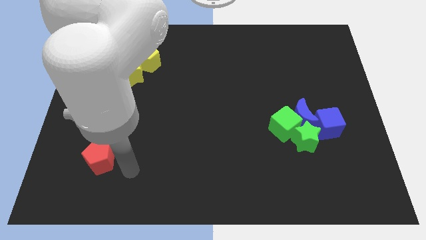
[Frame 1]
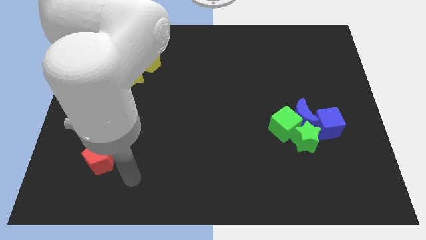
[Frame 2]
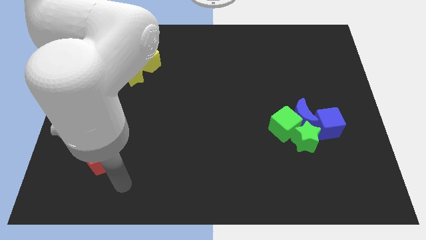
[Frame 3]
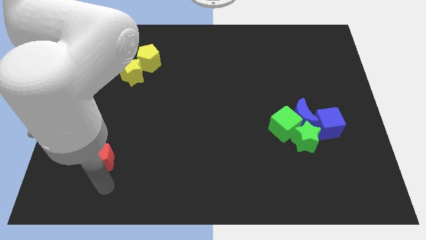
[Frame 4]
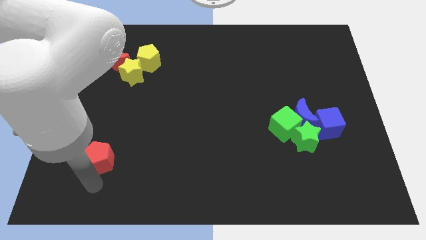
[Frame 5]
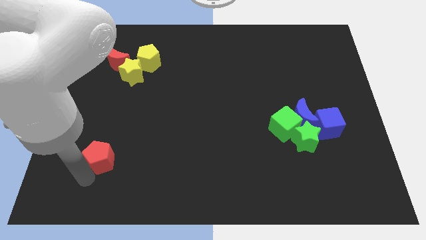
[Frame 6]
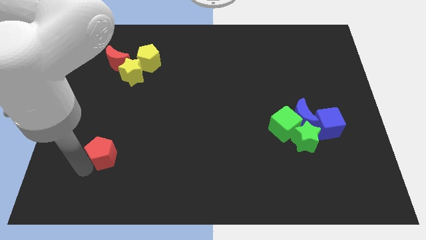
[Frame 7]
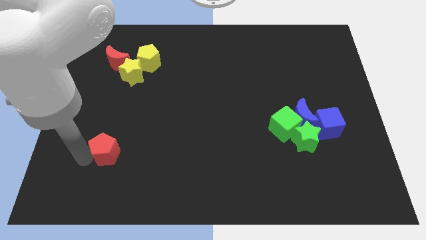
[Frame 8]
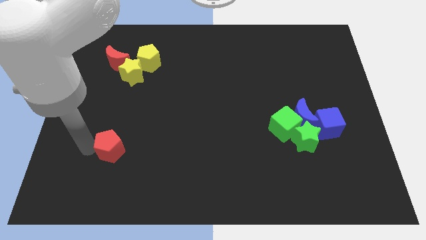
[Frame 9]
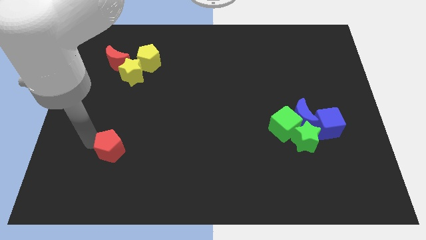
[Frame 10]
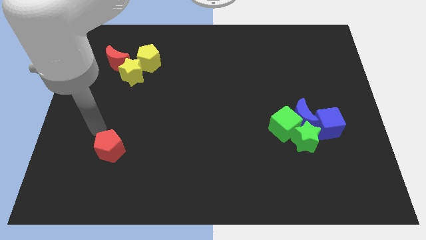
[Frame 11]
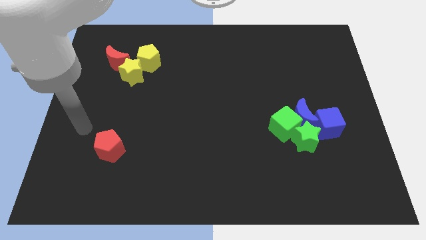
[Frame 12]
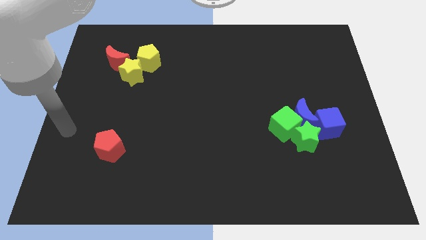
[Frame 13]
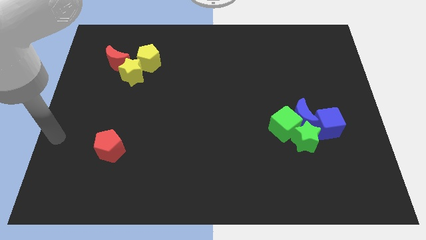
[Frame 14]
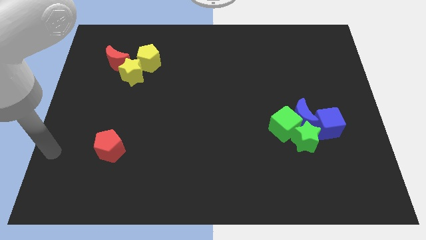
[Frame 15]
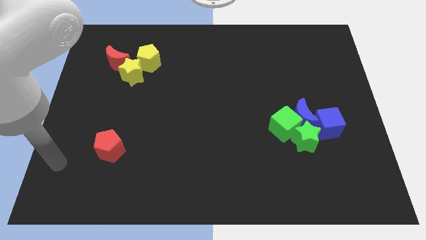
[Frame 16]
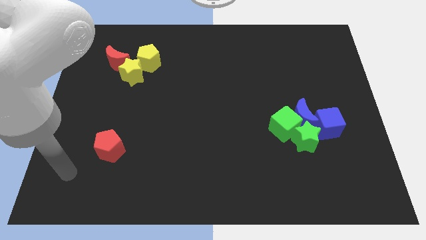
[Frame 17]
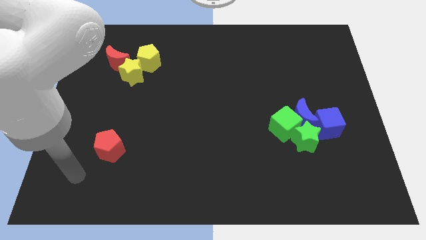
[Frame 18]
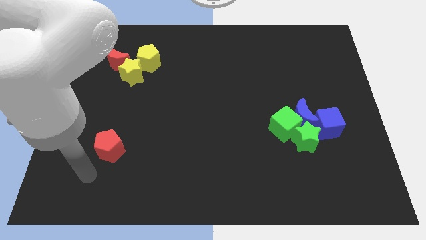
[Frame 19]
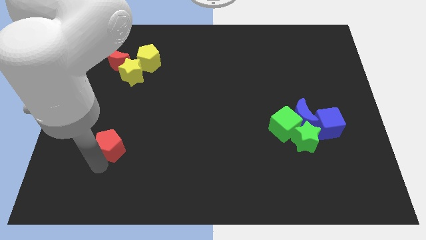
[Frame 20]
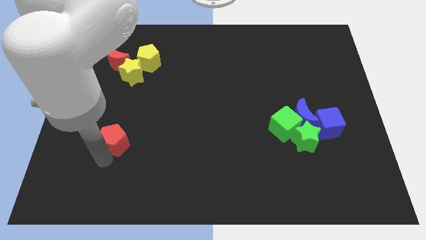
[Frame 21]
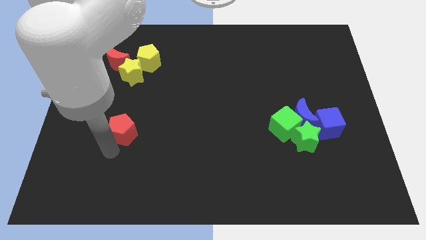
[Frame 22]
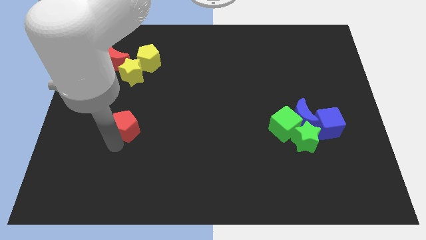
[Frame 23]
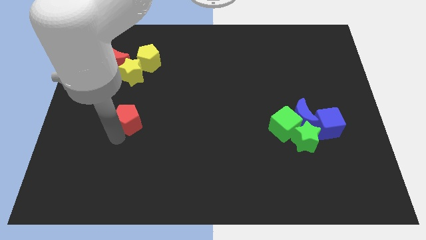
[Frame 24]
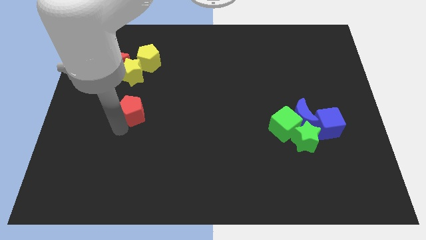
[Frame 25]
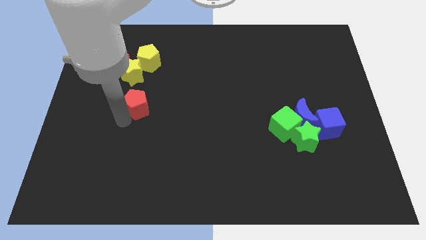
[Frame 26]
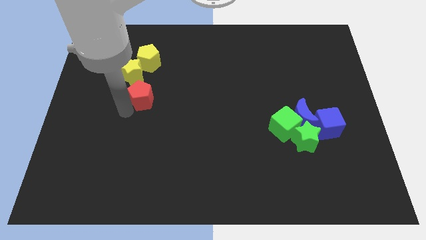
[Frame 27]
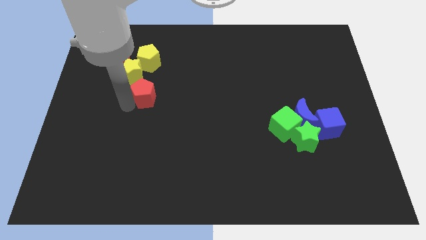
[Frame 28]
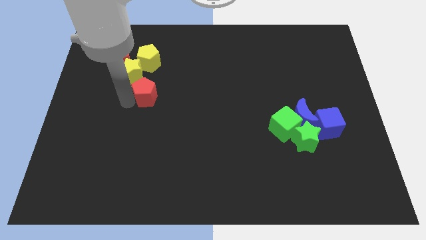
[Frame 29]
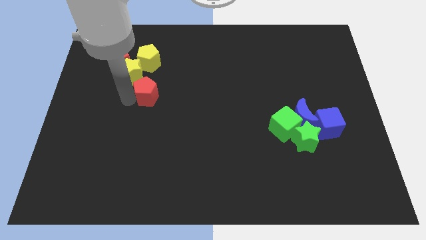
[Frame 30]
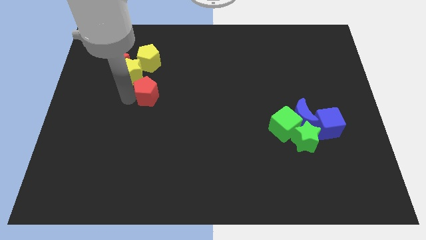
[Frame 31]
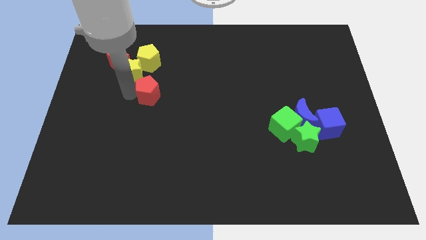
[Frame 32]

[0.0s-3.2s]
slide the red pentagon towards the group of blocks

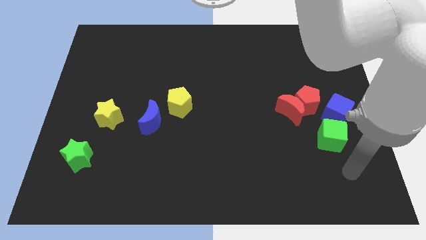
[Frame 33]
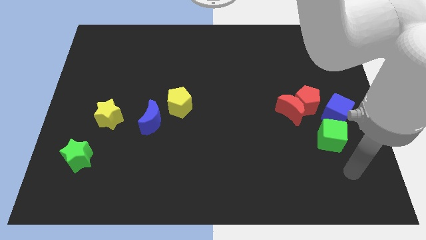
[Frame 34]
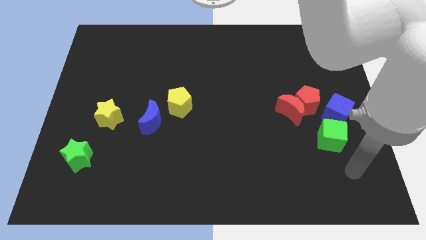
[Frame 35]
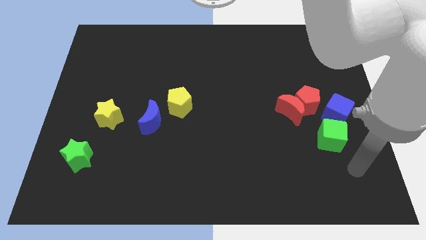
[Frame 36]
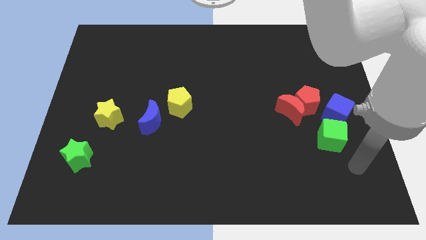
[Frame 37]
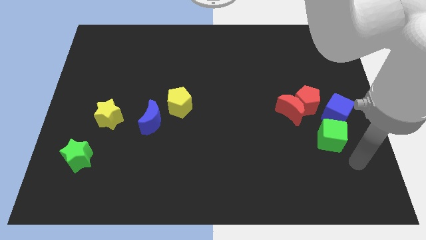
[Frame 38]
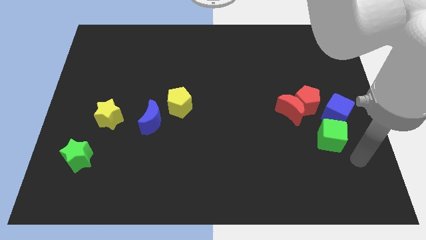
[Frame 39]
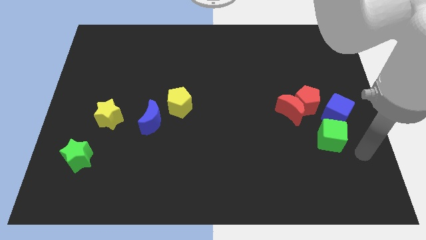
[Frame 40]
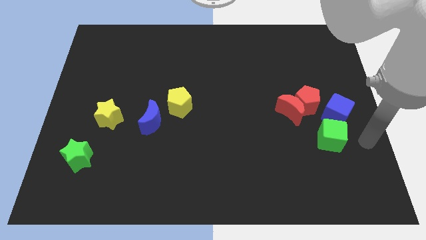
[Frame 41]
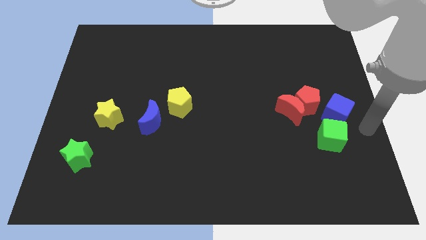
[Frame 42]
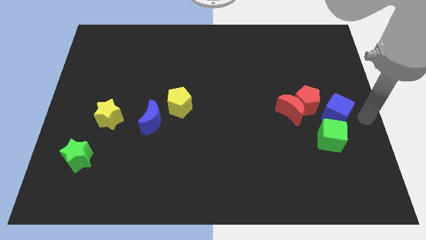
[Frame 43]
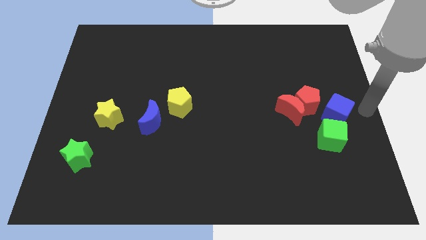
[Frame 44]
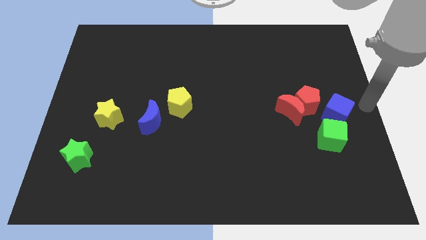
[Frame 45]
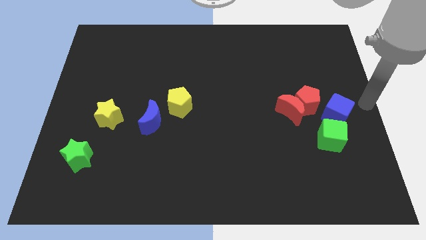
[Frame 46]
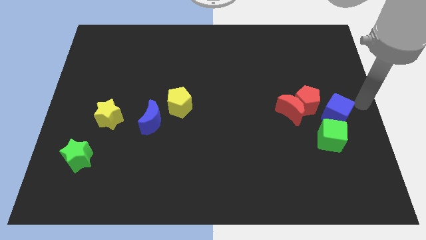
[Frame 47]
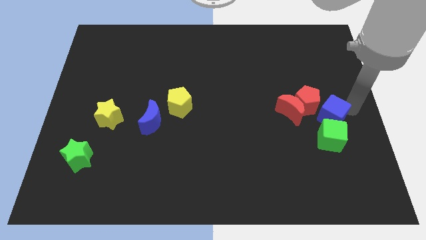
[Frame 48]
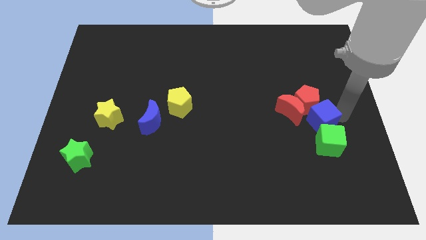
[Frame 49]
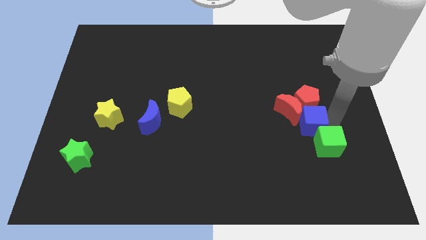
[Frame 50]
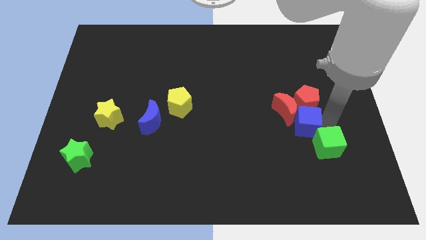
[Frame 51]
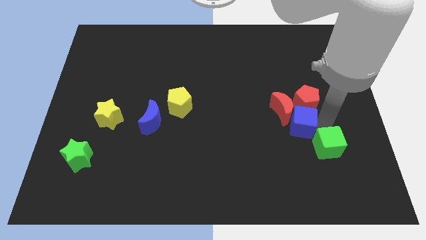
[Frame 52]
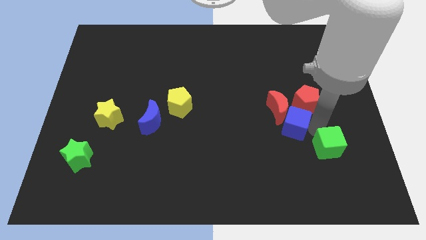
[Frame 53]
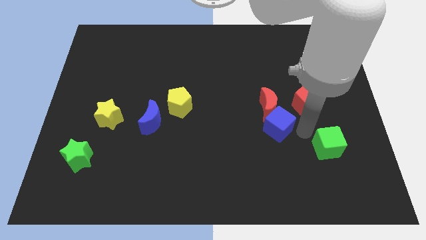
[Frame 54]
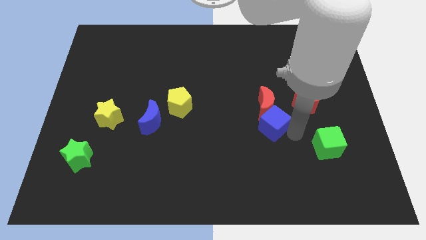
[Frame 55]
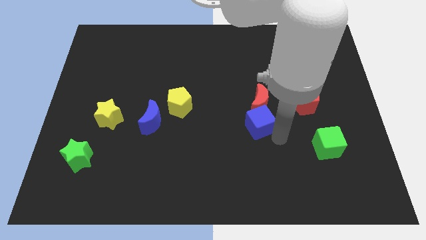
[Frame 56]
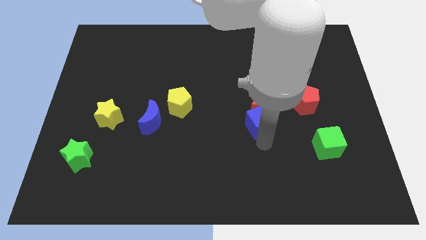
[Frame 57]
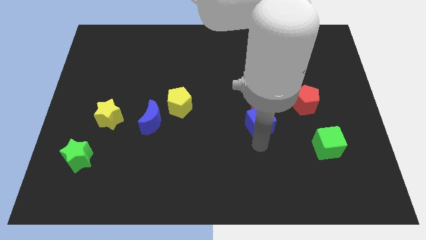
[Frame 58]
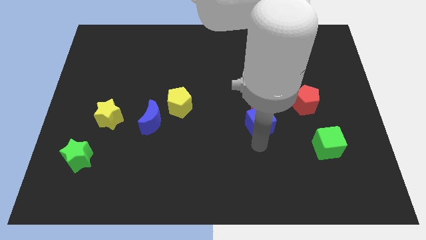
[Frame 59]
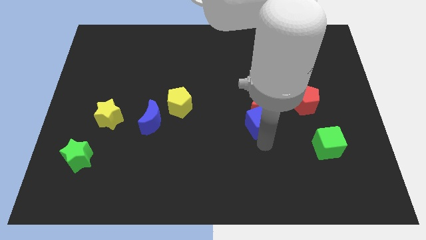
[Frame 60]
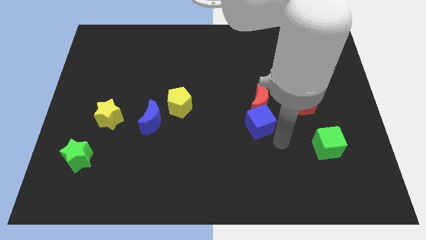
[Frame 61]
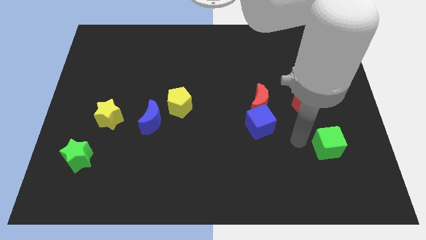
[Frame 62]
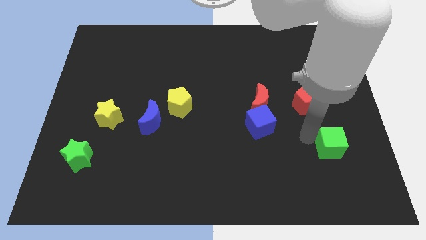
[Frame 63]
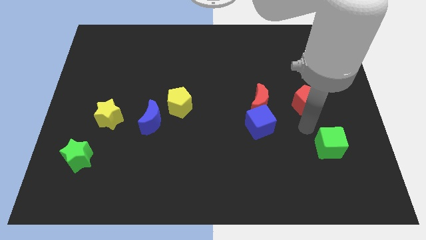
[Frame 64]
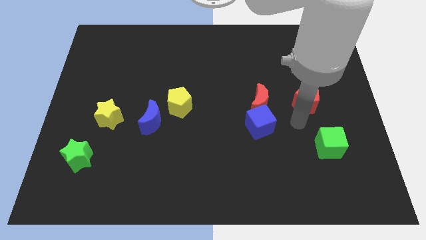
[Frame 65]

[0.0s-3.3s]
move the red moon with the blue cube

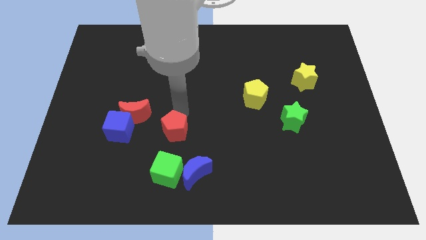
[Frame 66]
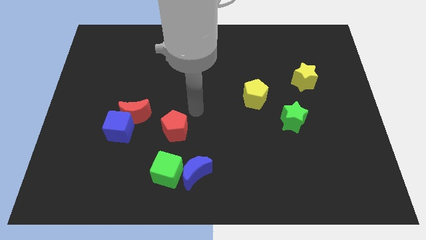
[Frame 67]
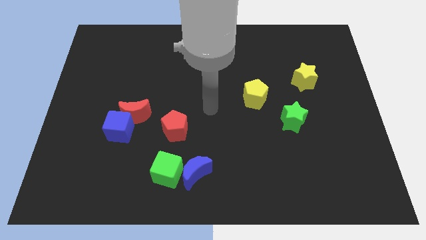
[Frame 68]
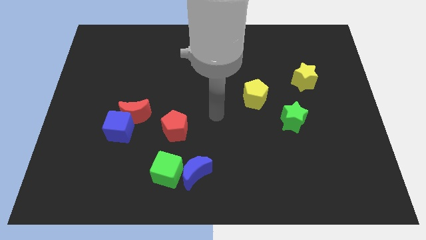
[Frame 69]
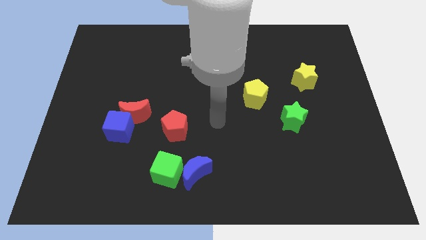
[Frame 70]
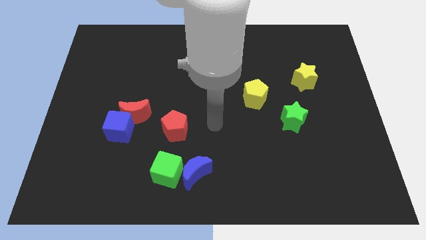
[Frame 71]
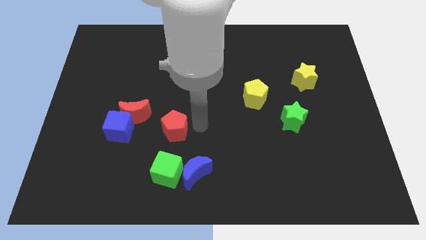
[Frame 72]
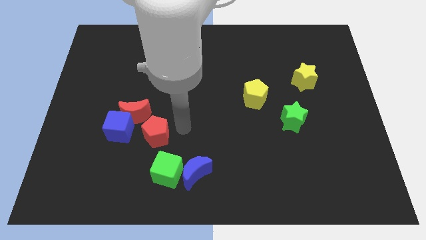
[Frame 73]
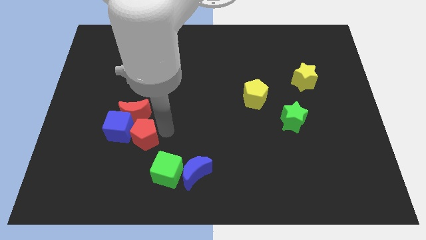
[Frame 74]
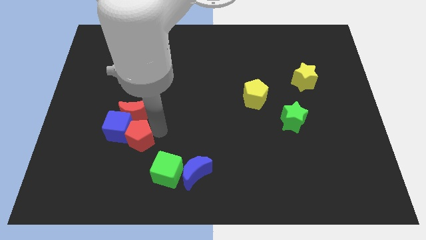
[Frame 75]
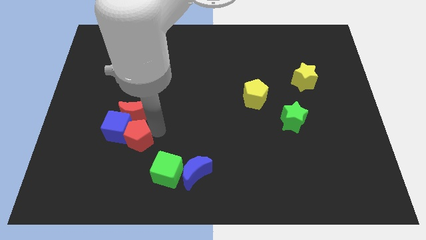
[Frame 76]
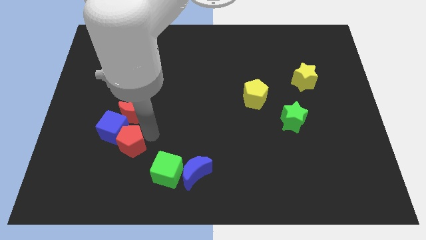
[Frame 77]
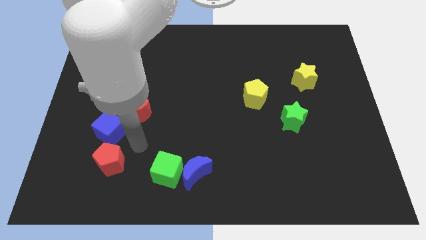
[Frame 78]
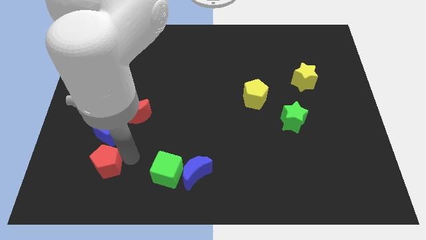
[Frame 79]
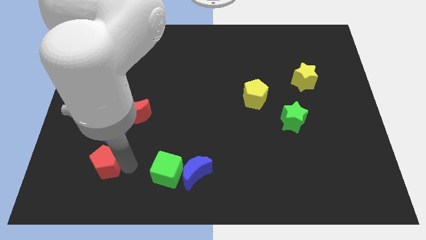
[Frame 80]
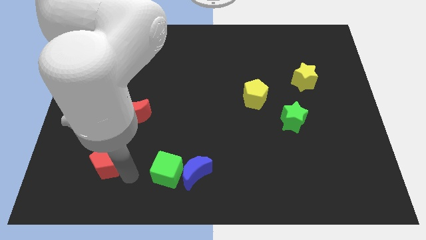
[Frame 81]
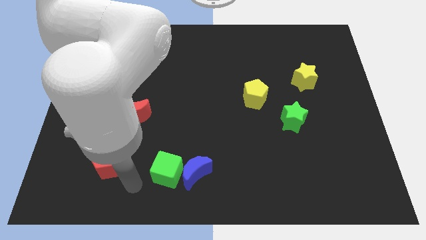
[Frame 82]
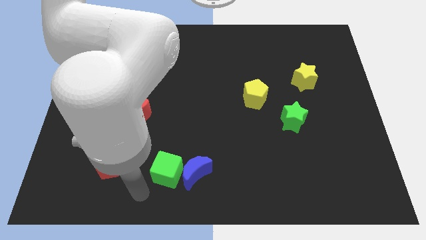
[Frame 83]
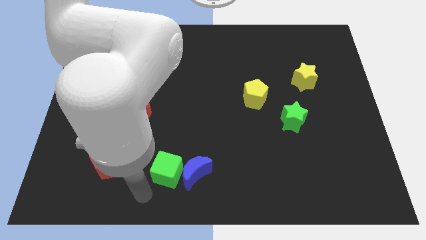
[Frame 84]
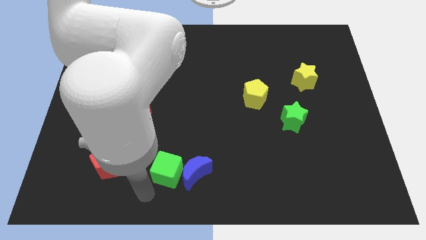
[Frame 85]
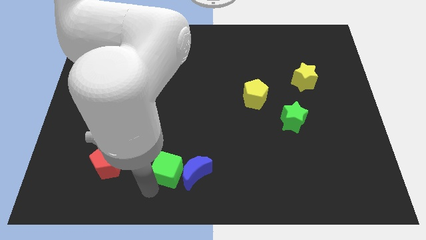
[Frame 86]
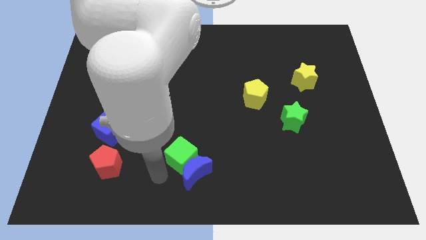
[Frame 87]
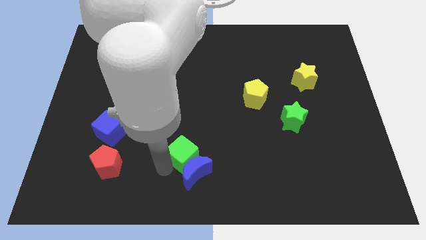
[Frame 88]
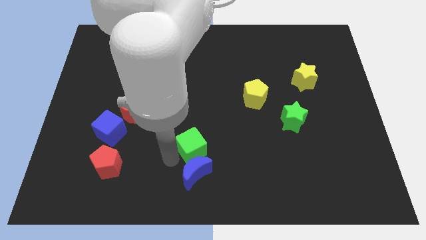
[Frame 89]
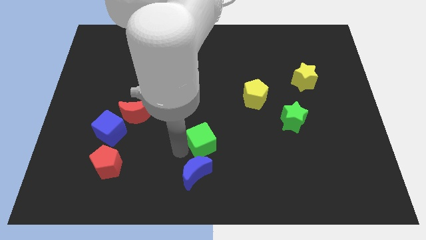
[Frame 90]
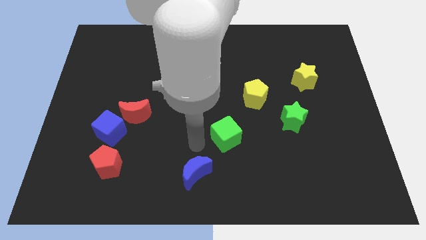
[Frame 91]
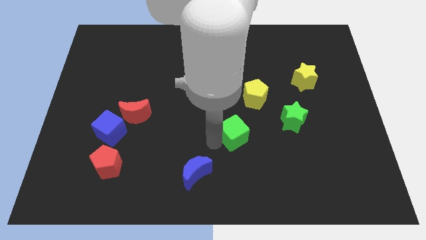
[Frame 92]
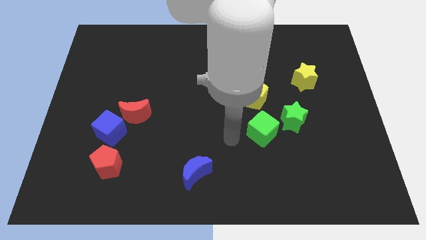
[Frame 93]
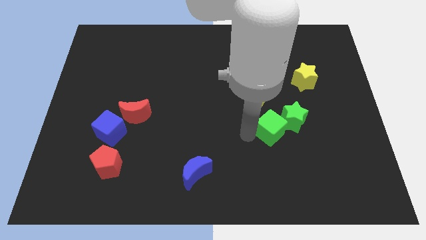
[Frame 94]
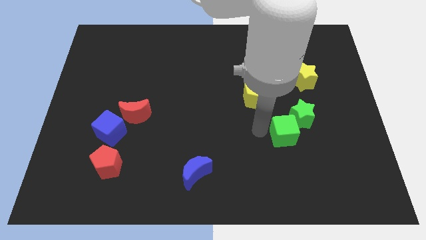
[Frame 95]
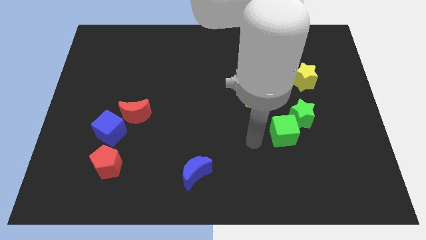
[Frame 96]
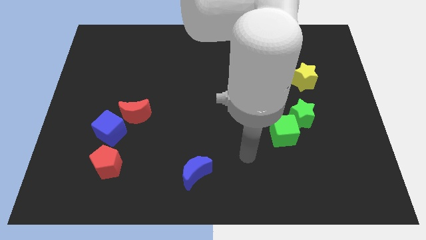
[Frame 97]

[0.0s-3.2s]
move the red pentagon and the green cube away from each other
